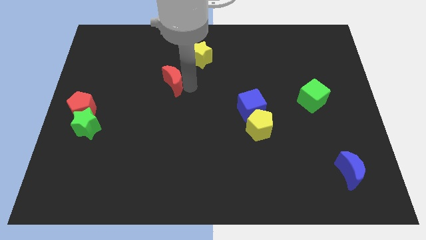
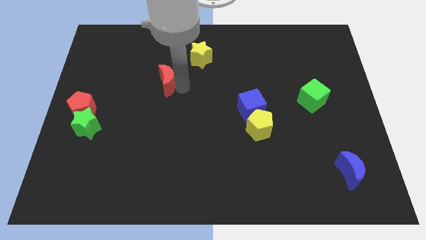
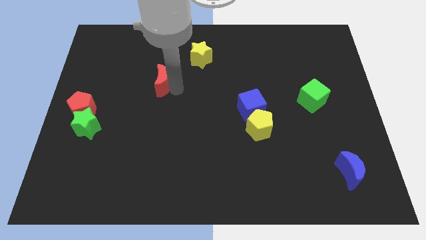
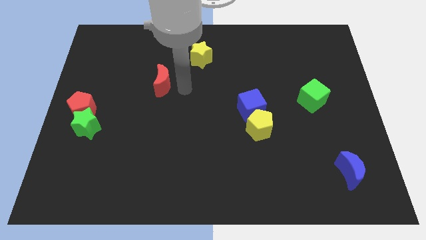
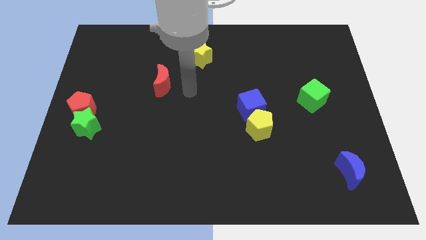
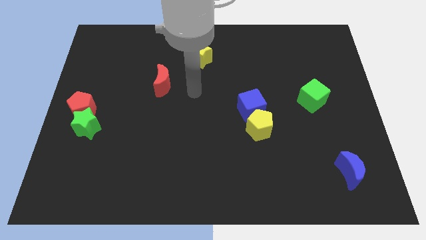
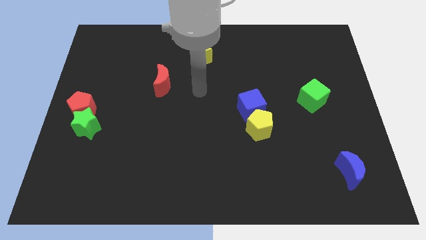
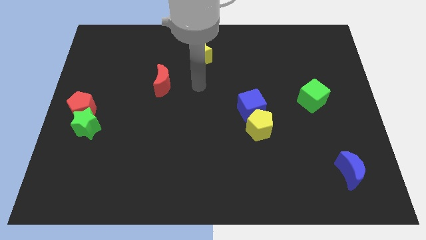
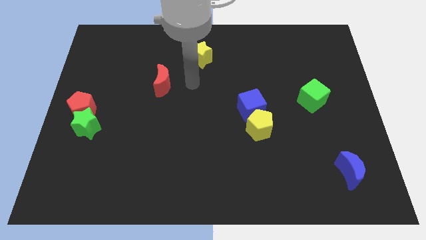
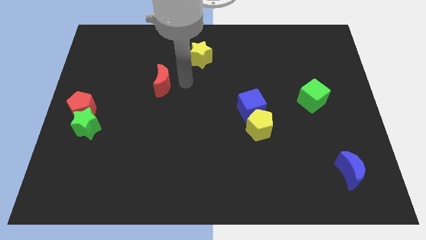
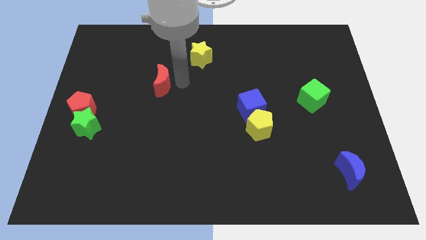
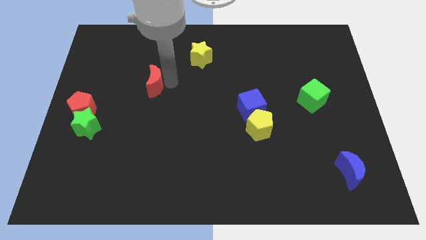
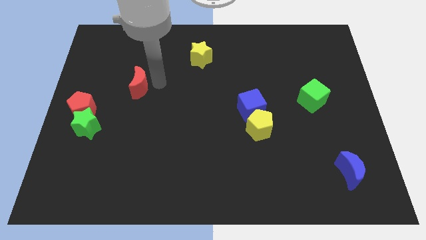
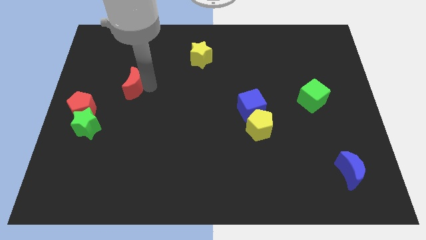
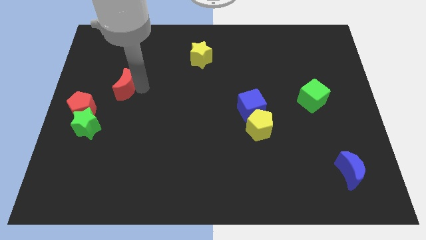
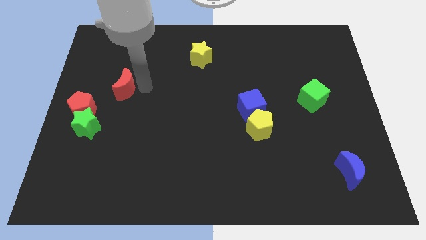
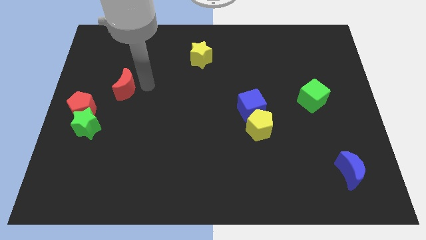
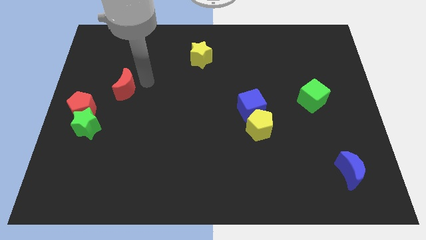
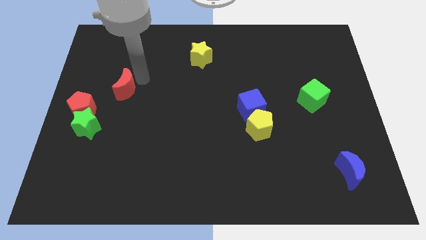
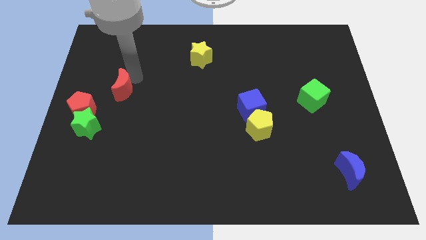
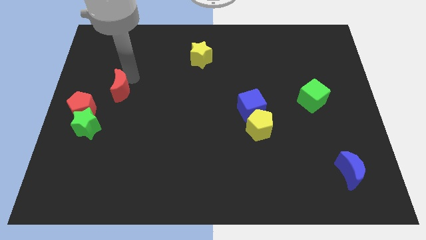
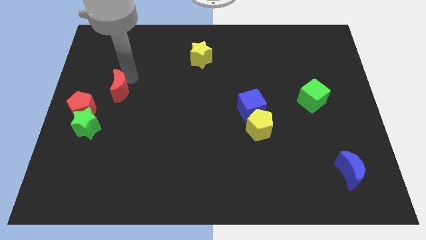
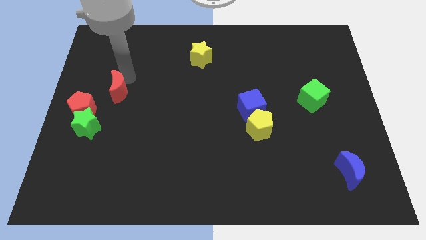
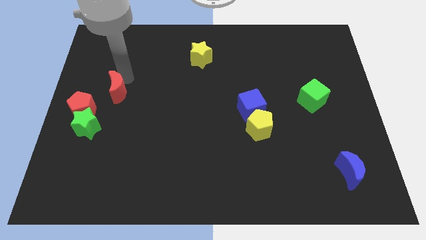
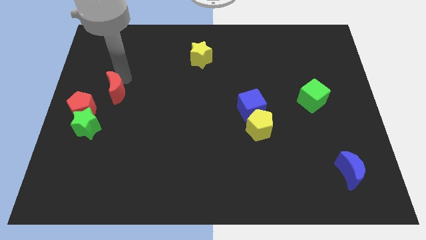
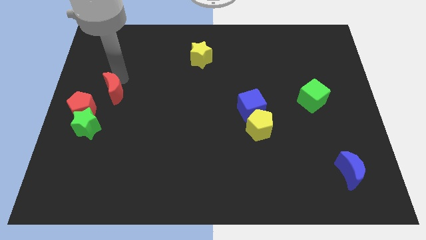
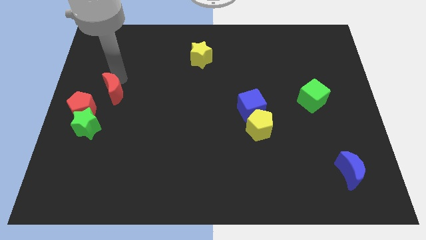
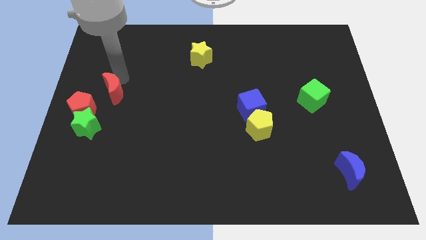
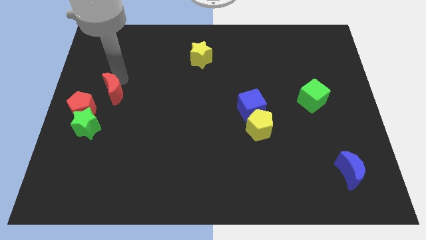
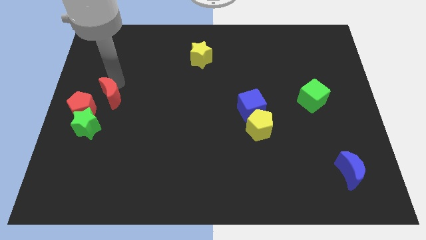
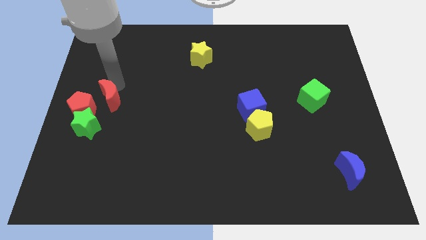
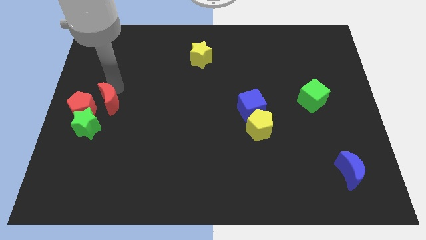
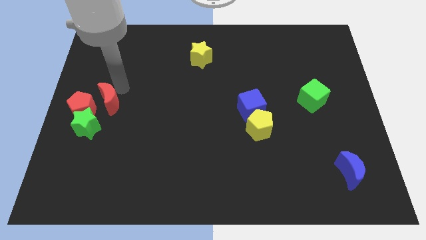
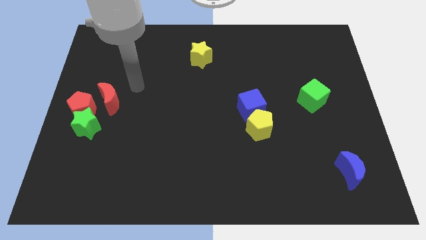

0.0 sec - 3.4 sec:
push red crescent beside red pentagon

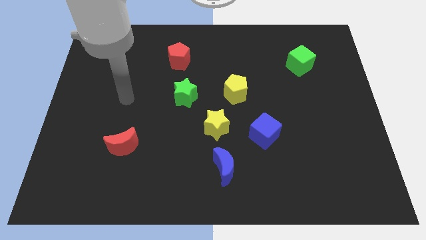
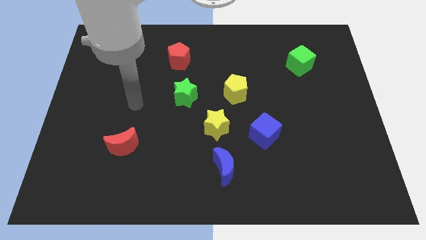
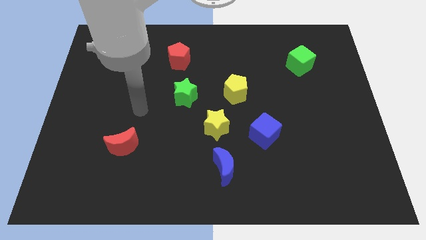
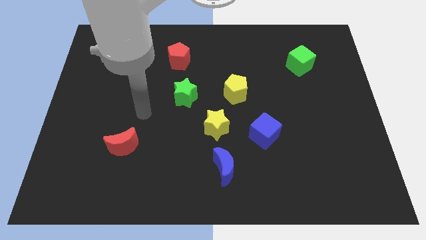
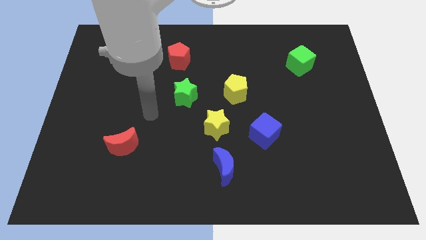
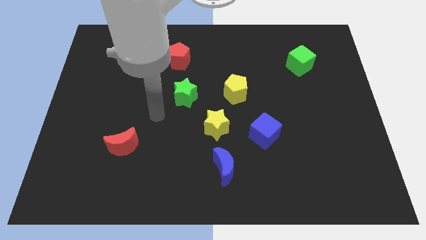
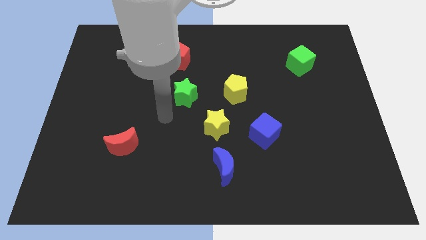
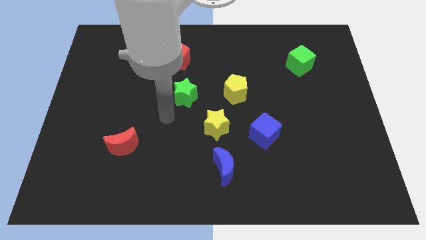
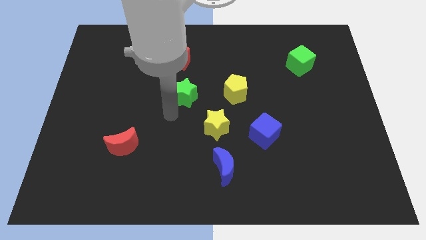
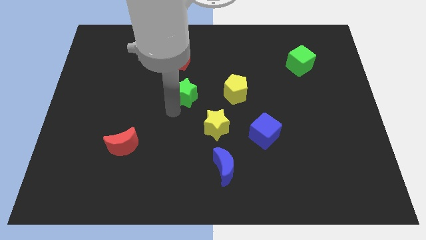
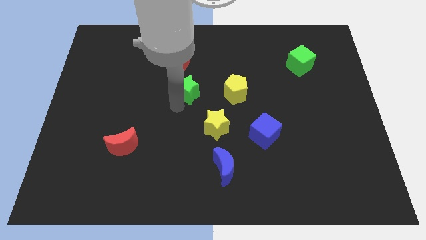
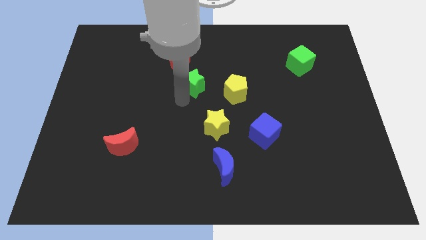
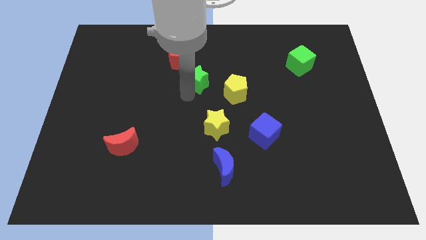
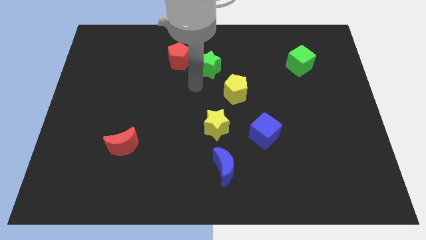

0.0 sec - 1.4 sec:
move the green star upwards

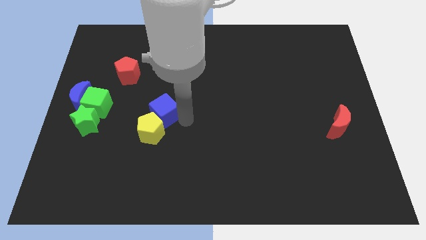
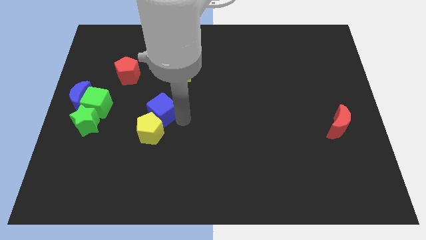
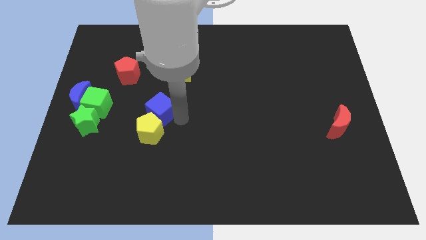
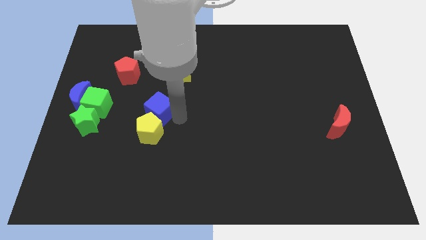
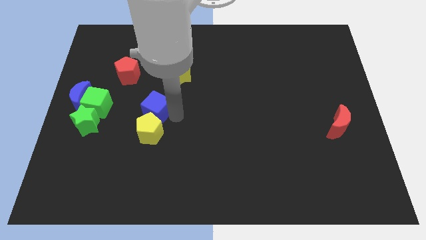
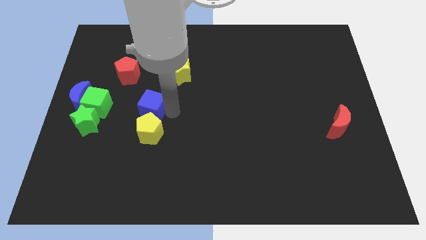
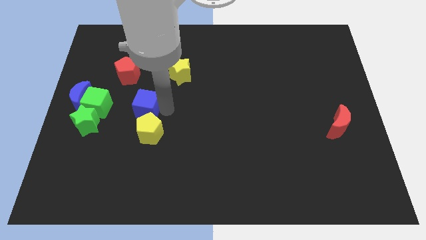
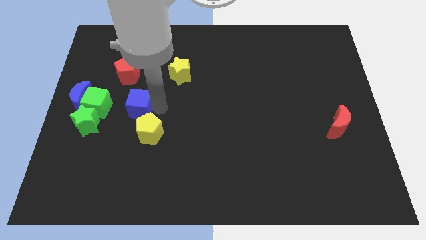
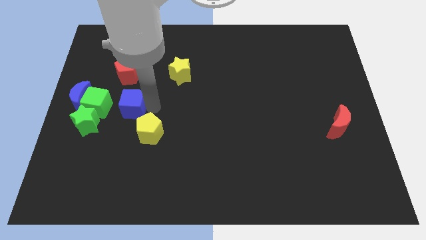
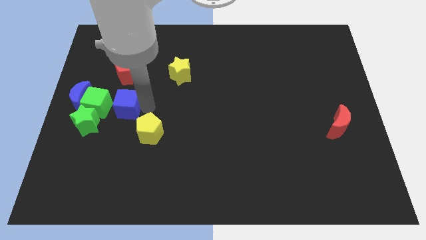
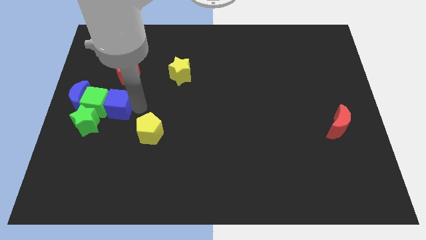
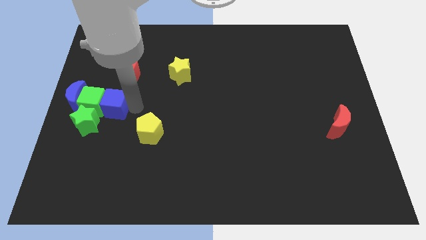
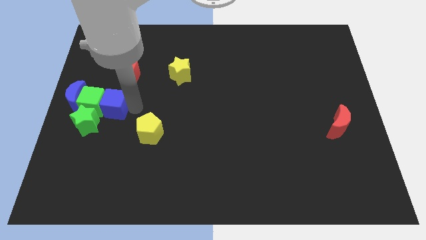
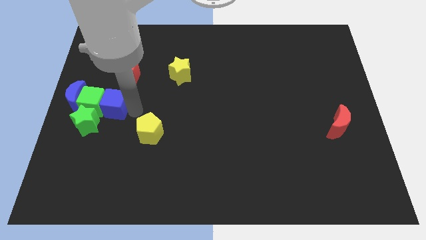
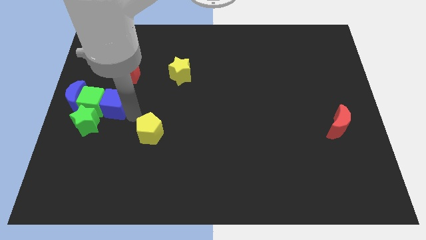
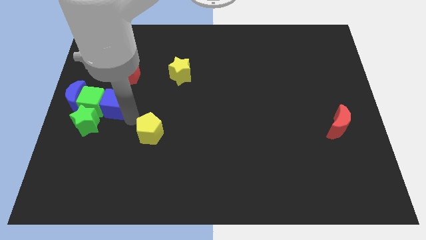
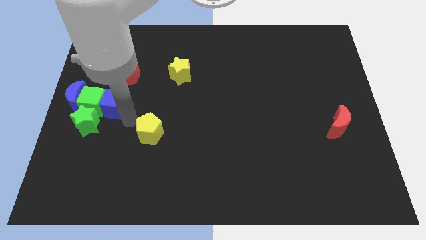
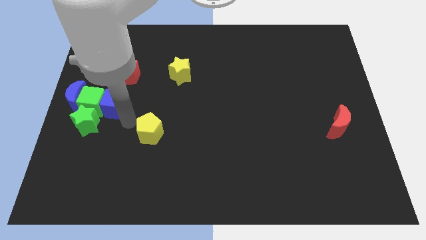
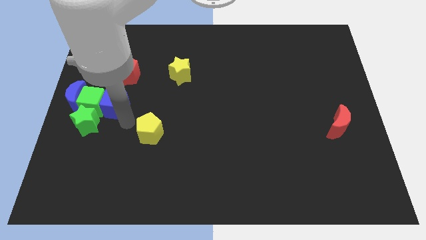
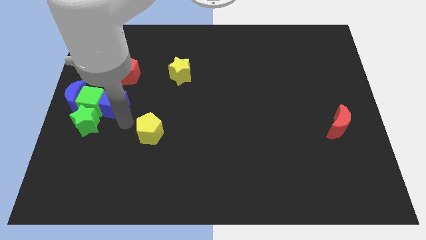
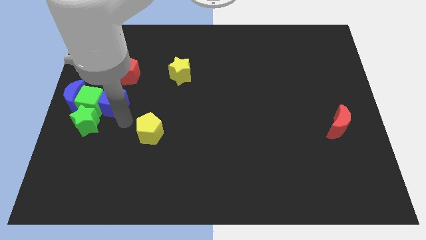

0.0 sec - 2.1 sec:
push the blue cube into the green cube

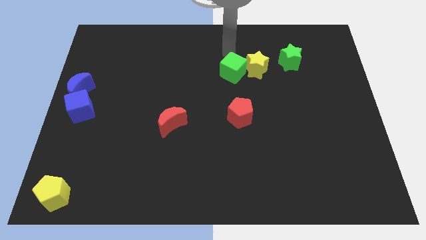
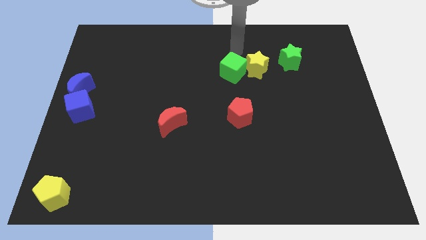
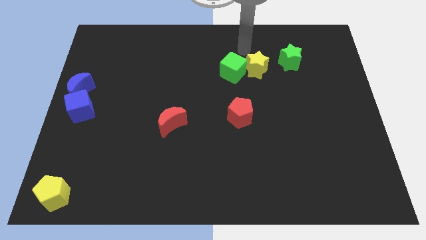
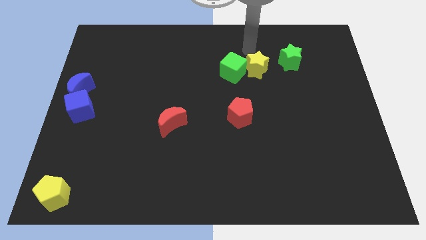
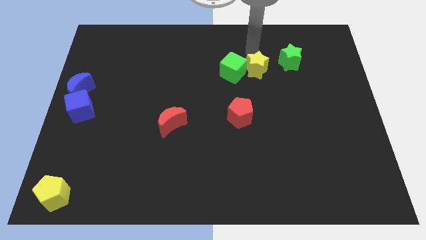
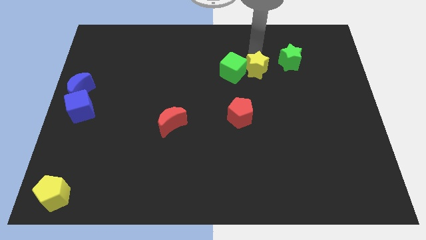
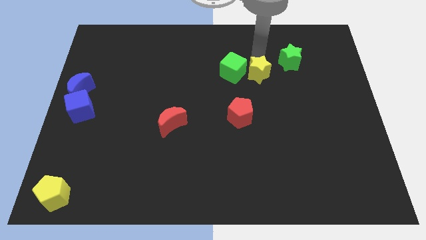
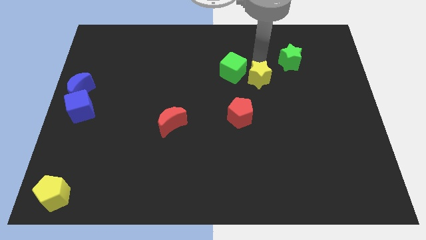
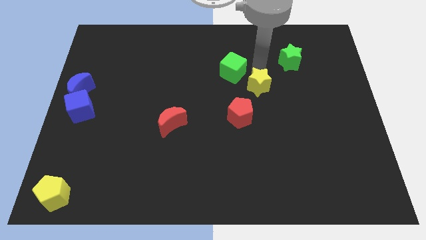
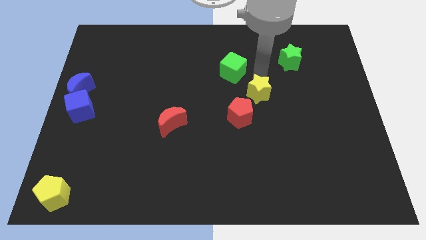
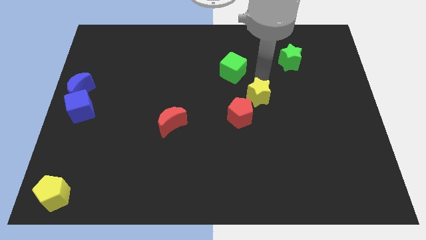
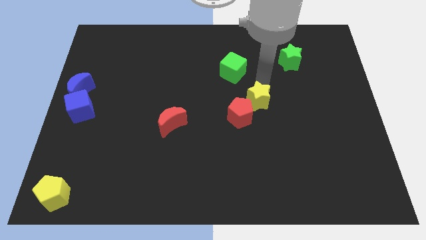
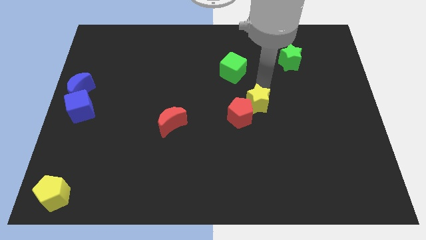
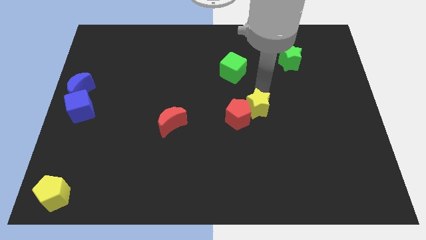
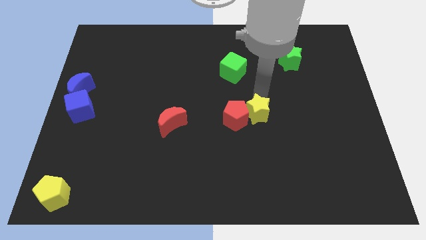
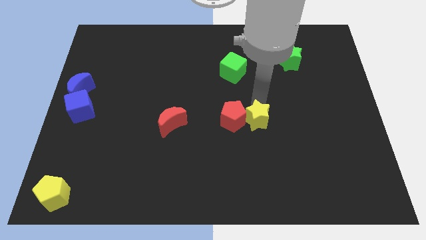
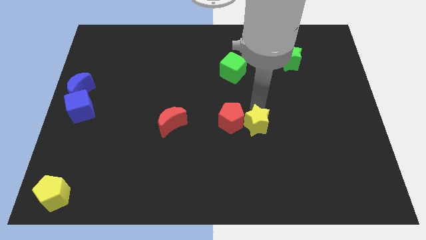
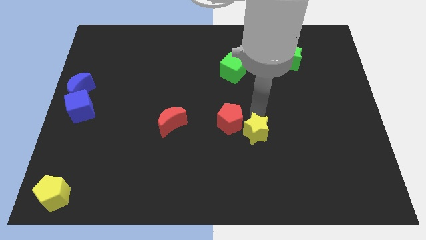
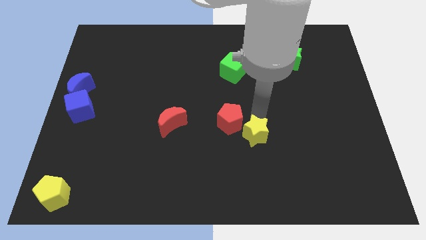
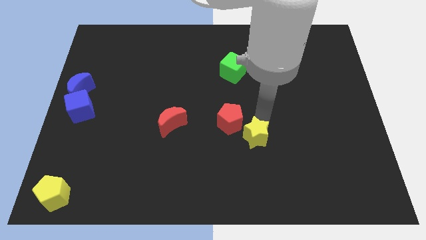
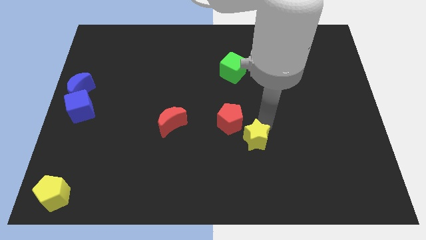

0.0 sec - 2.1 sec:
slightly move the yellow star to the bottom
